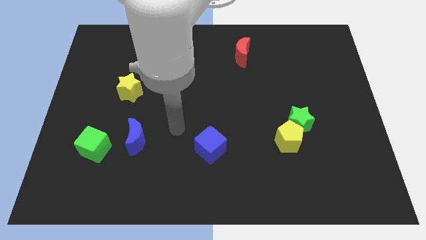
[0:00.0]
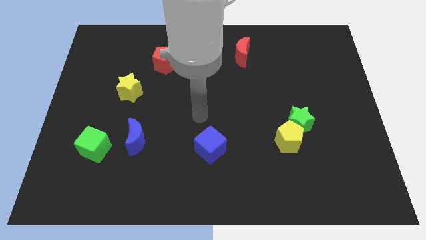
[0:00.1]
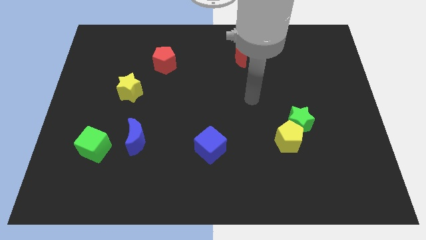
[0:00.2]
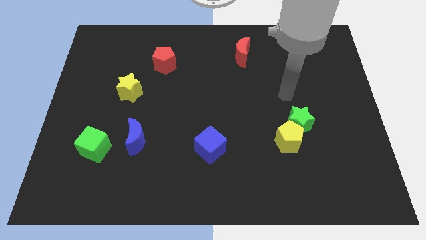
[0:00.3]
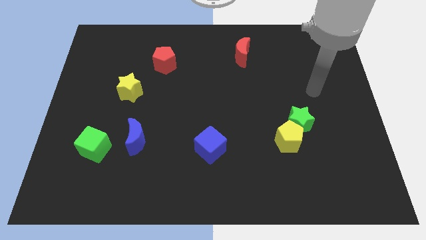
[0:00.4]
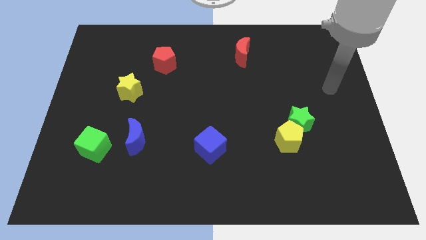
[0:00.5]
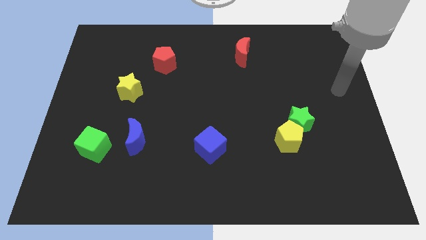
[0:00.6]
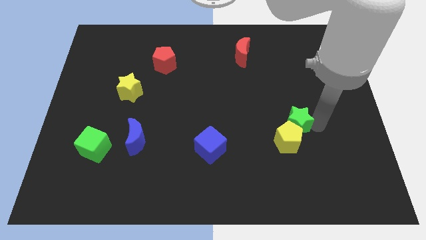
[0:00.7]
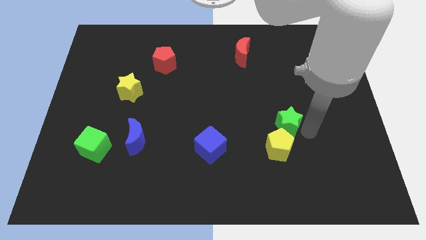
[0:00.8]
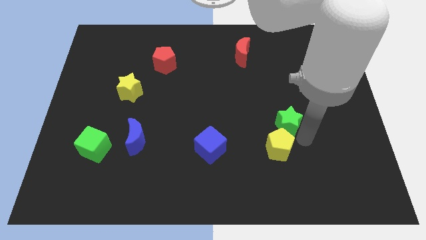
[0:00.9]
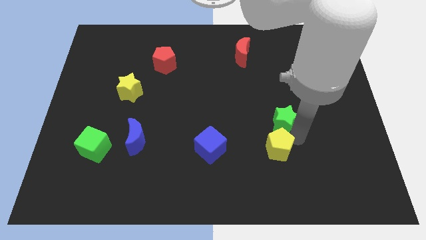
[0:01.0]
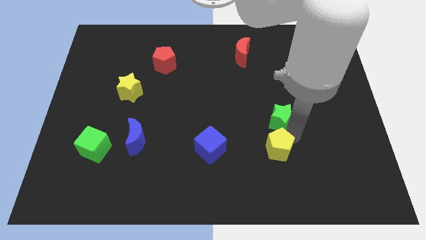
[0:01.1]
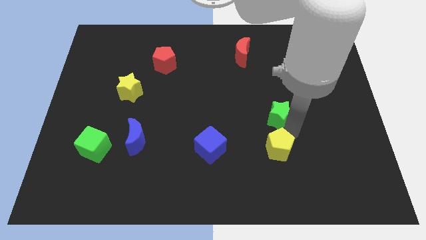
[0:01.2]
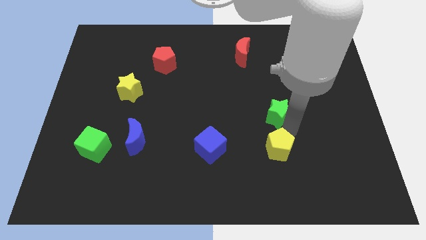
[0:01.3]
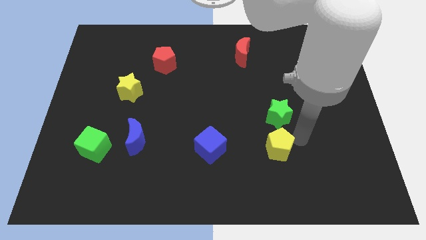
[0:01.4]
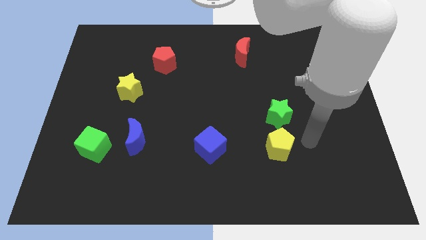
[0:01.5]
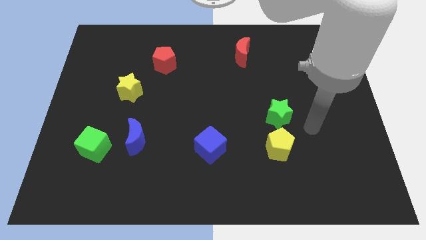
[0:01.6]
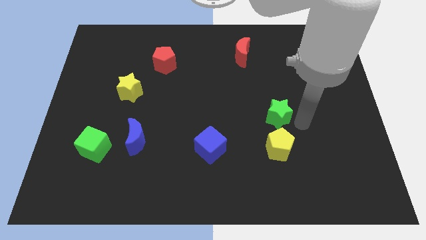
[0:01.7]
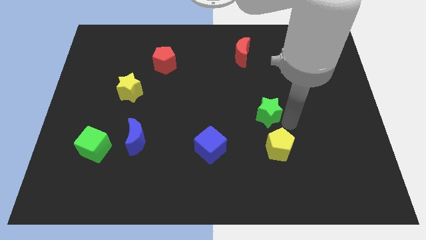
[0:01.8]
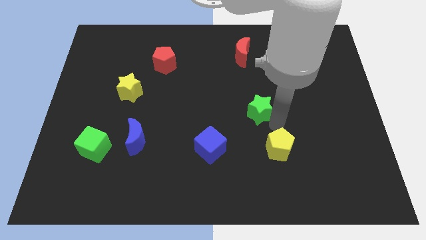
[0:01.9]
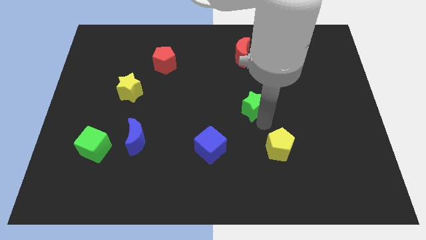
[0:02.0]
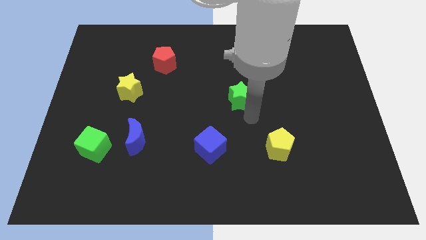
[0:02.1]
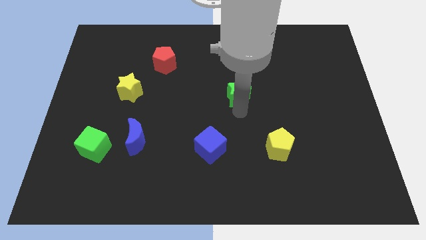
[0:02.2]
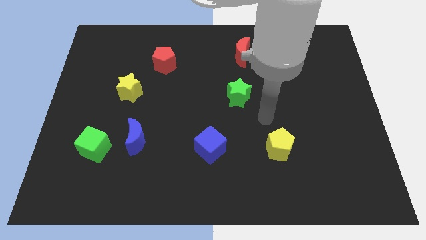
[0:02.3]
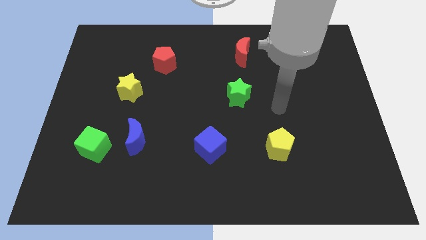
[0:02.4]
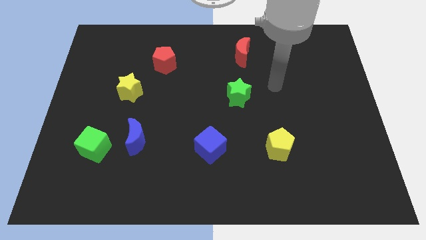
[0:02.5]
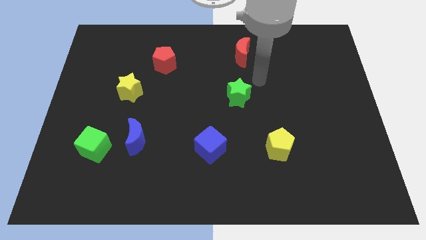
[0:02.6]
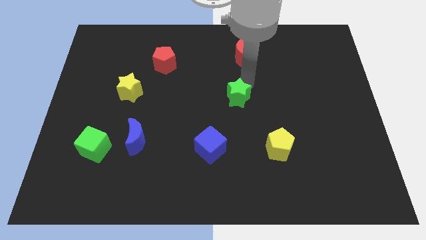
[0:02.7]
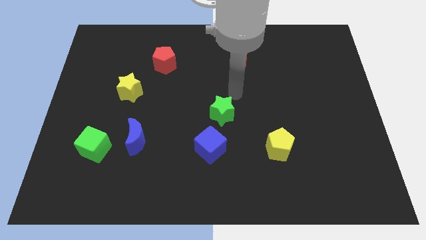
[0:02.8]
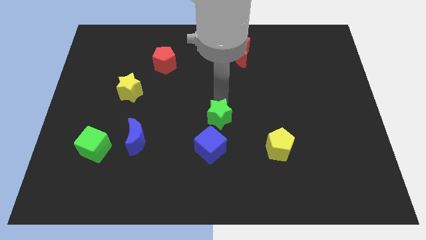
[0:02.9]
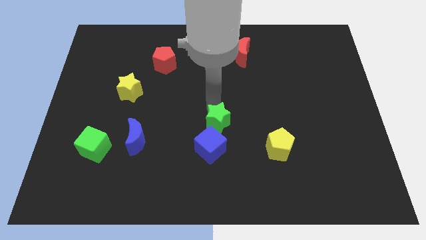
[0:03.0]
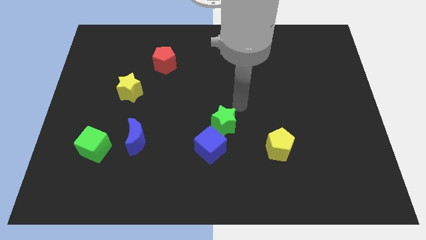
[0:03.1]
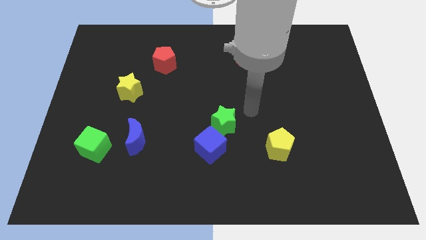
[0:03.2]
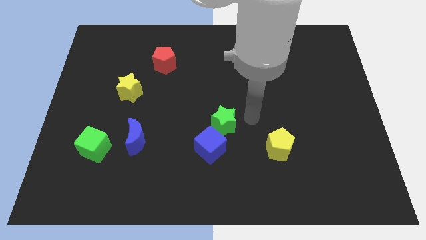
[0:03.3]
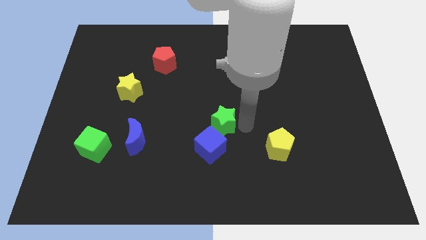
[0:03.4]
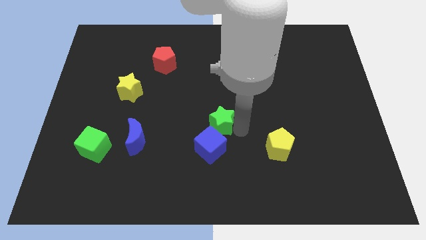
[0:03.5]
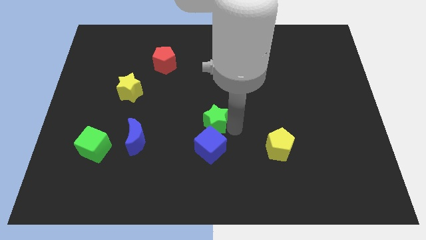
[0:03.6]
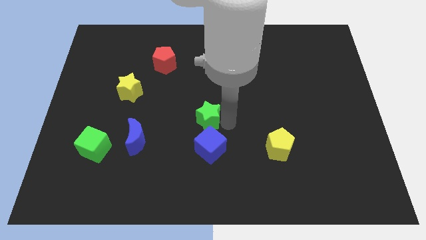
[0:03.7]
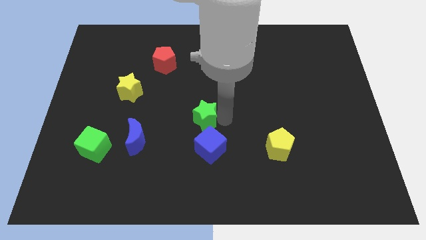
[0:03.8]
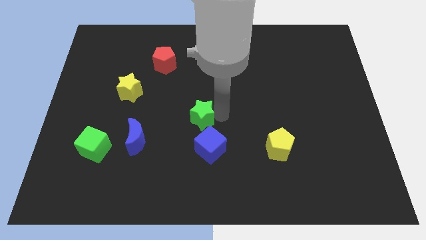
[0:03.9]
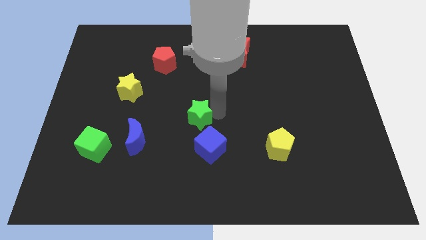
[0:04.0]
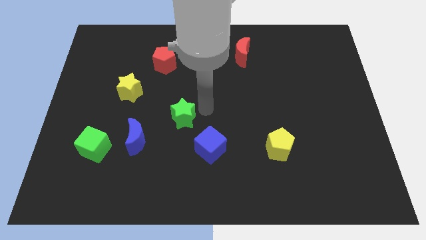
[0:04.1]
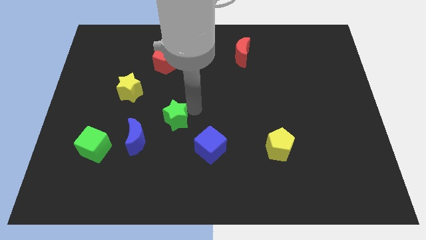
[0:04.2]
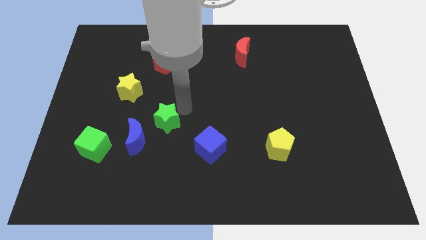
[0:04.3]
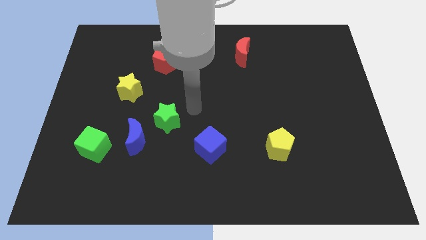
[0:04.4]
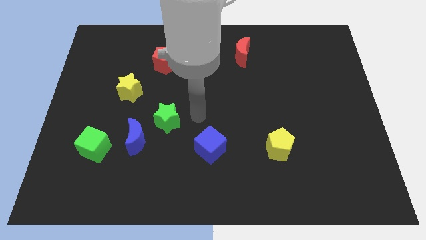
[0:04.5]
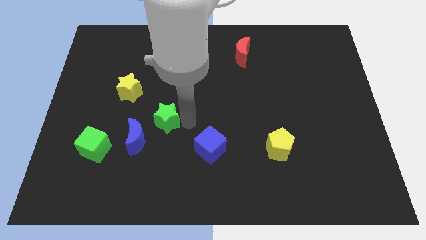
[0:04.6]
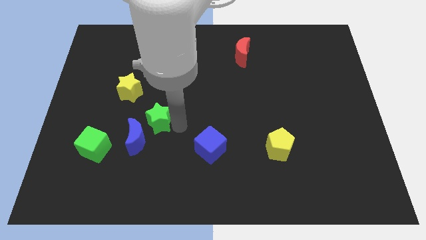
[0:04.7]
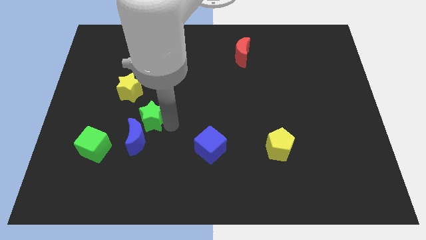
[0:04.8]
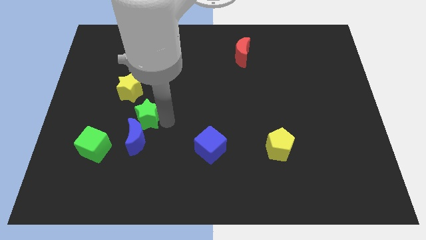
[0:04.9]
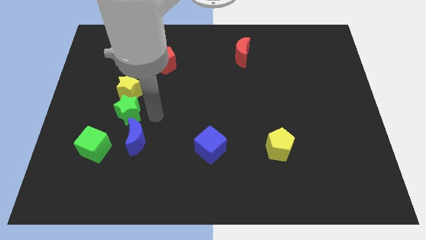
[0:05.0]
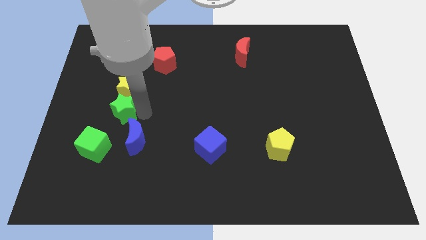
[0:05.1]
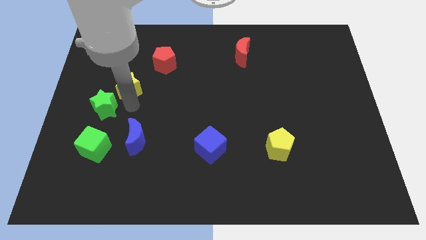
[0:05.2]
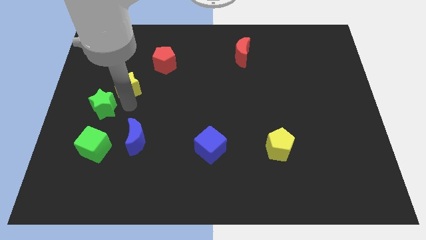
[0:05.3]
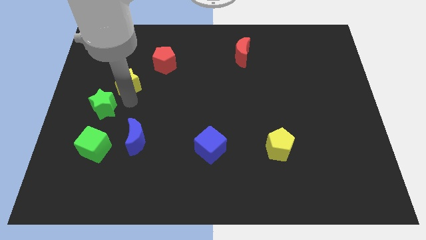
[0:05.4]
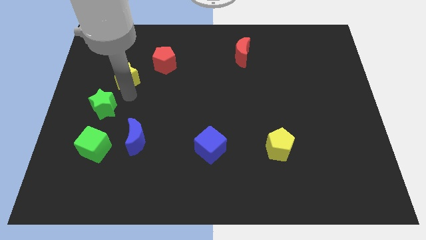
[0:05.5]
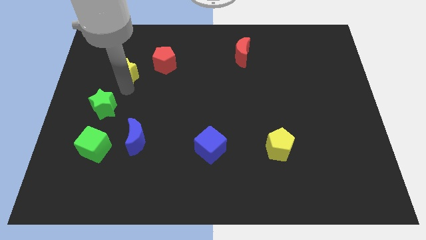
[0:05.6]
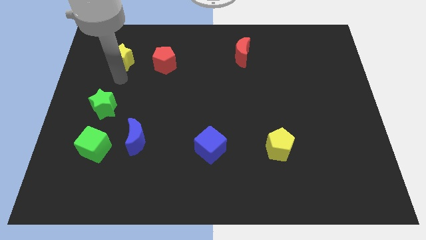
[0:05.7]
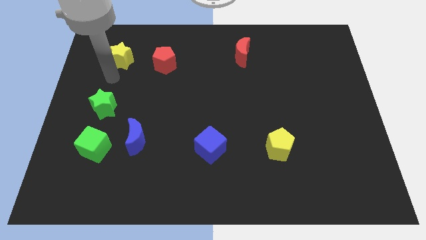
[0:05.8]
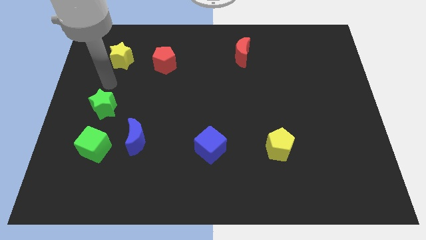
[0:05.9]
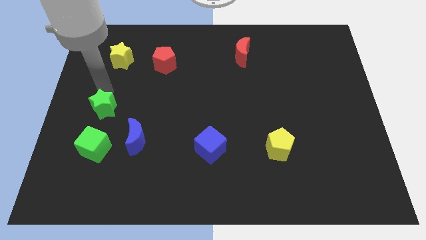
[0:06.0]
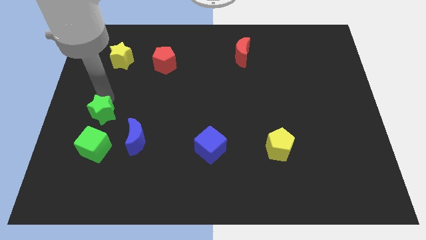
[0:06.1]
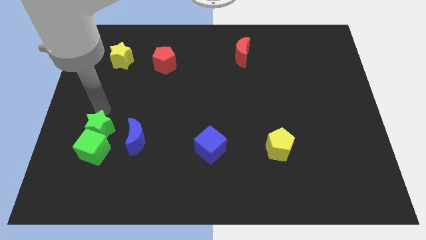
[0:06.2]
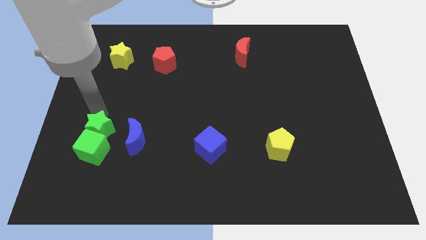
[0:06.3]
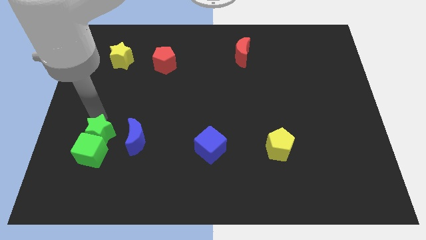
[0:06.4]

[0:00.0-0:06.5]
slide the green star next to the green cube

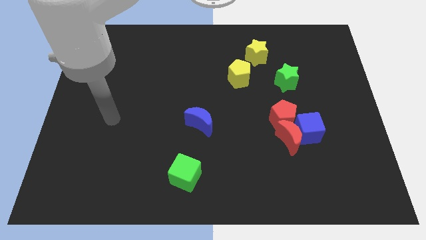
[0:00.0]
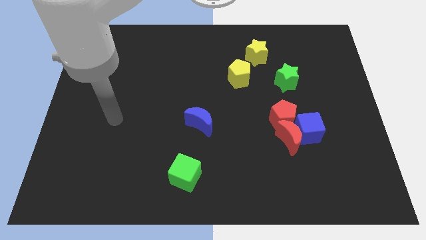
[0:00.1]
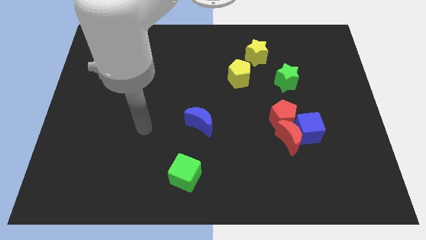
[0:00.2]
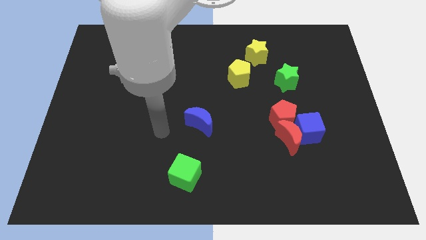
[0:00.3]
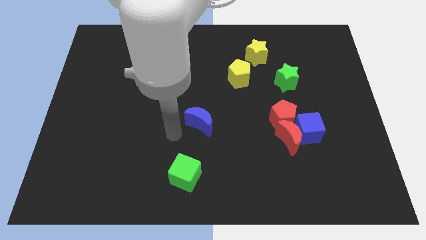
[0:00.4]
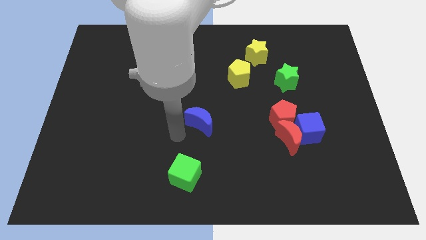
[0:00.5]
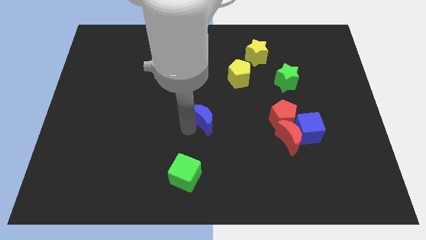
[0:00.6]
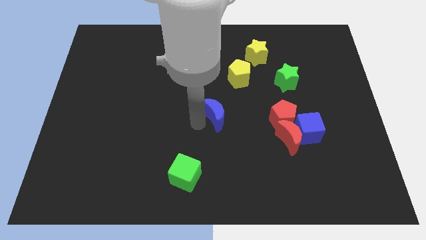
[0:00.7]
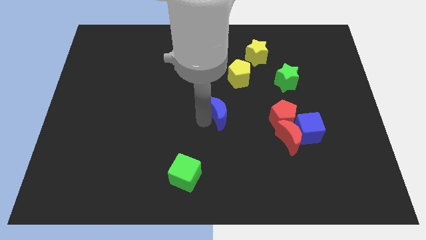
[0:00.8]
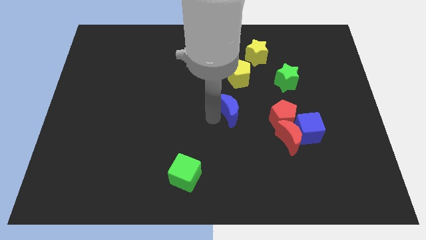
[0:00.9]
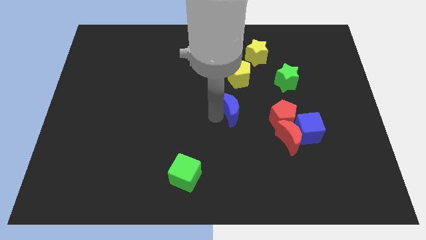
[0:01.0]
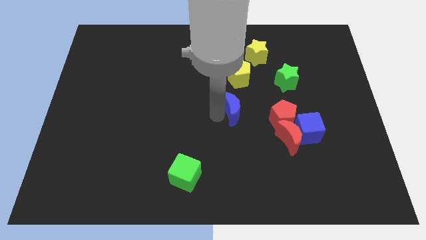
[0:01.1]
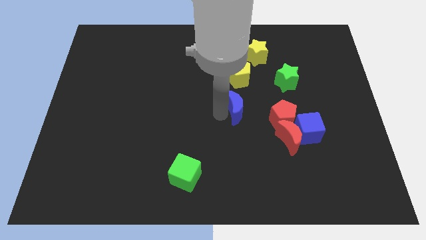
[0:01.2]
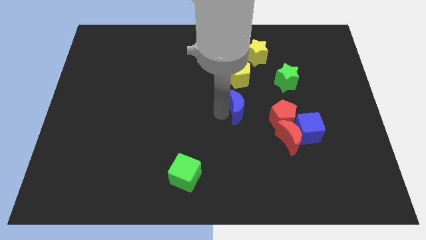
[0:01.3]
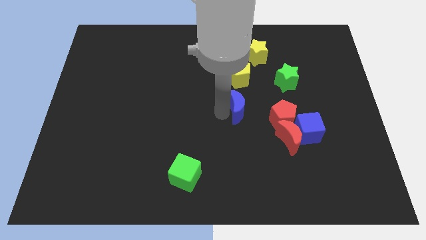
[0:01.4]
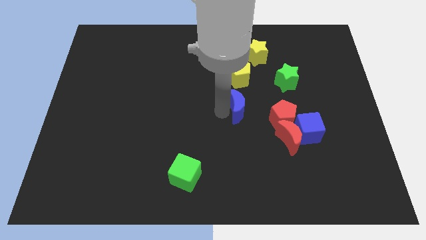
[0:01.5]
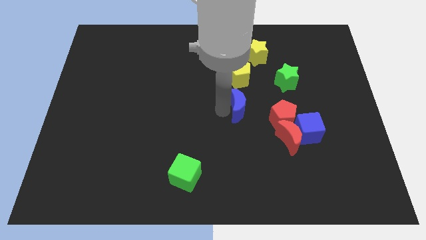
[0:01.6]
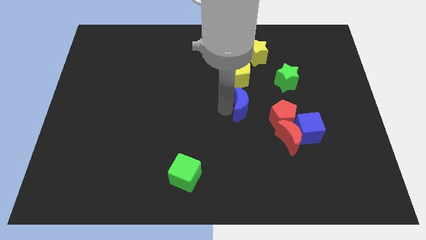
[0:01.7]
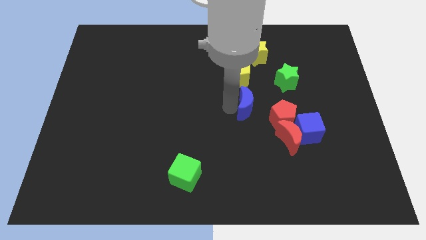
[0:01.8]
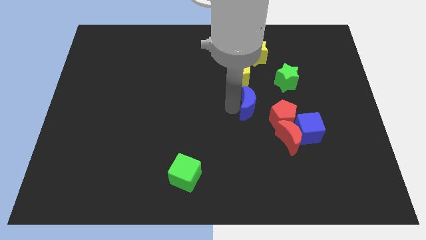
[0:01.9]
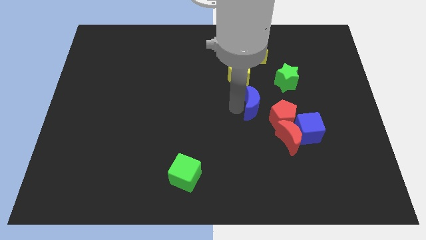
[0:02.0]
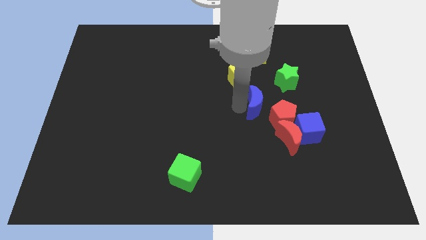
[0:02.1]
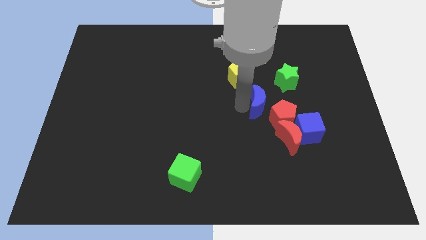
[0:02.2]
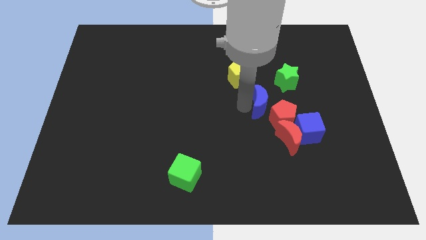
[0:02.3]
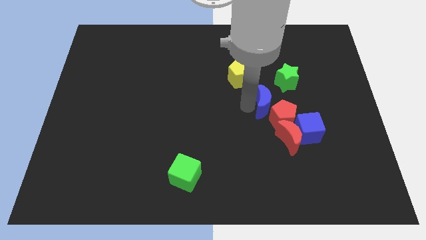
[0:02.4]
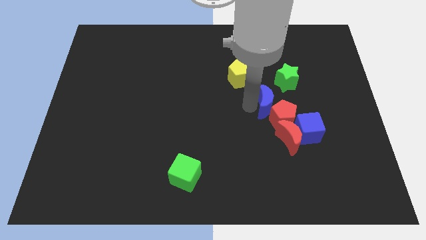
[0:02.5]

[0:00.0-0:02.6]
put the blue moon to the red pentagon
